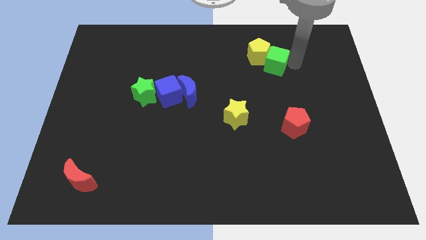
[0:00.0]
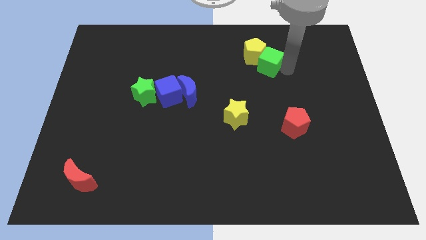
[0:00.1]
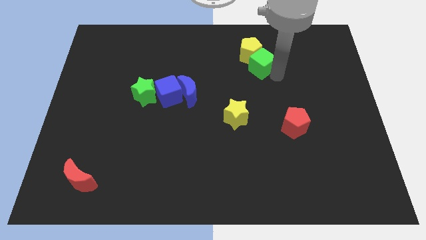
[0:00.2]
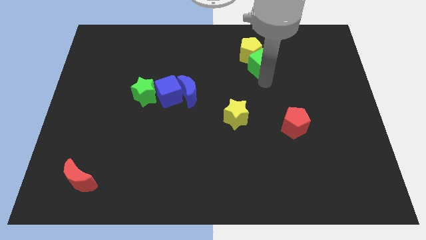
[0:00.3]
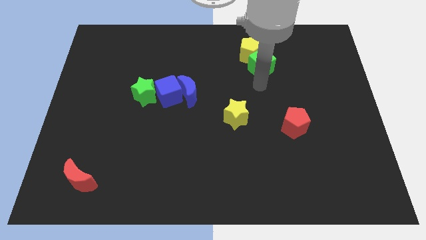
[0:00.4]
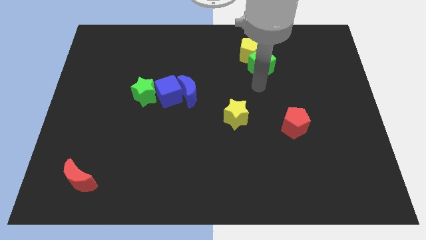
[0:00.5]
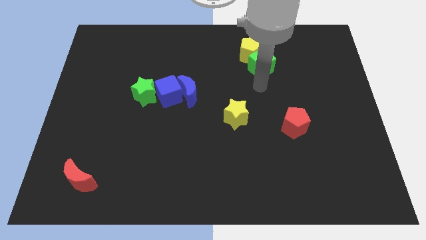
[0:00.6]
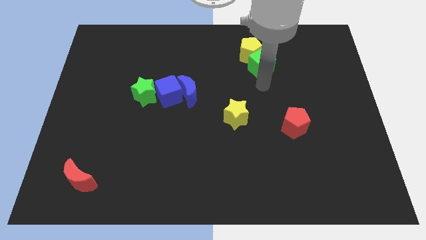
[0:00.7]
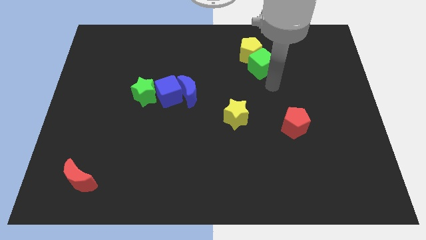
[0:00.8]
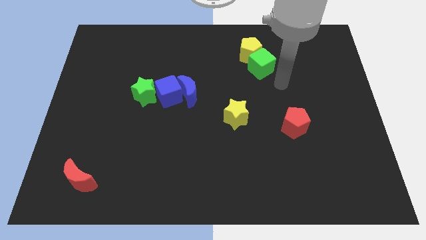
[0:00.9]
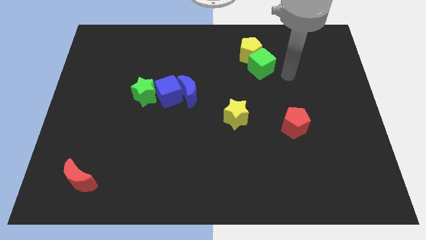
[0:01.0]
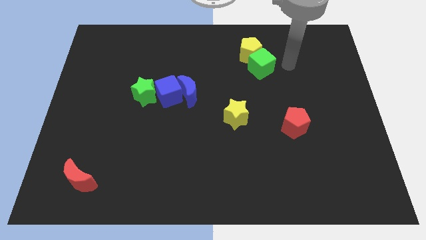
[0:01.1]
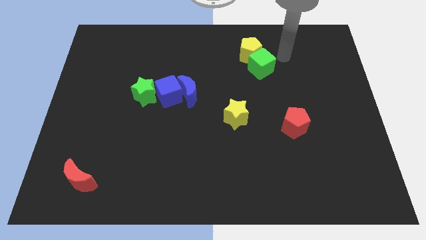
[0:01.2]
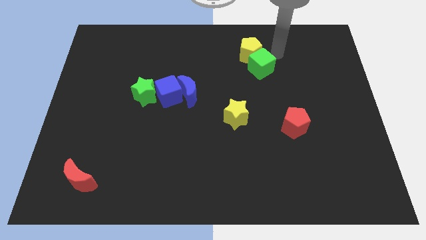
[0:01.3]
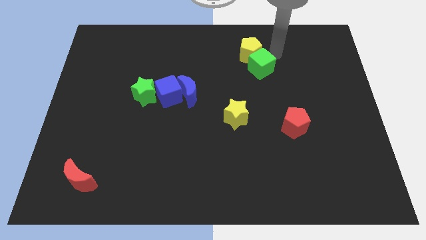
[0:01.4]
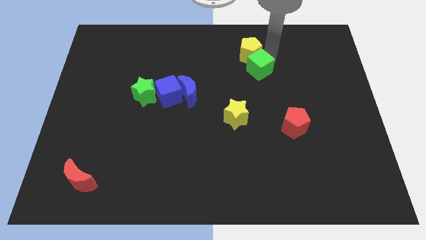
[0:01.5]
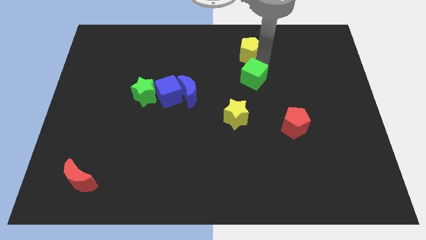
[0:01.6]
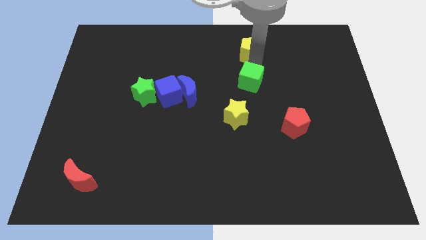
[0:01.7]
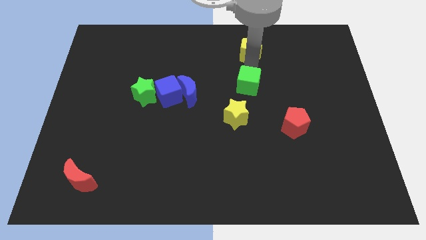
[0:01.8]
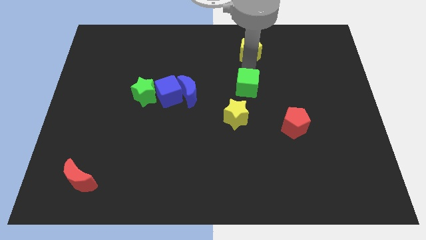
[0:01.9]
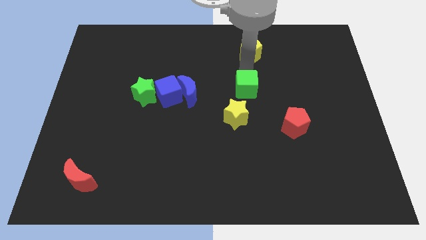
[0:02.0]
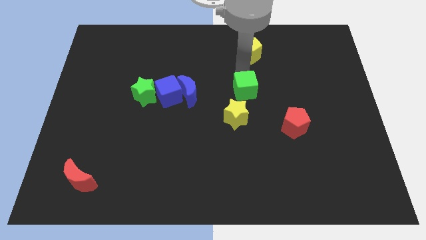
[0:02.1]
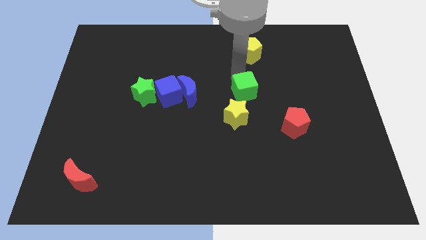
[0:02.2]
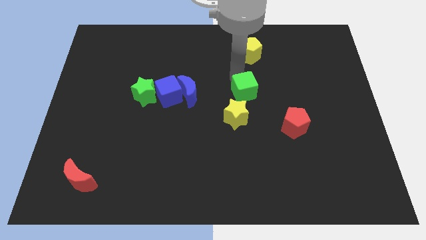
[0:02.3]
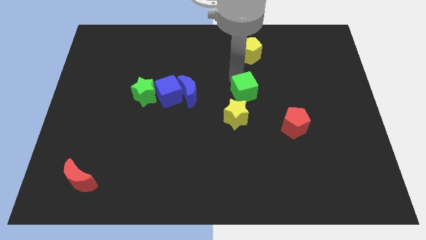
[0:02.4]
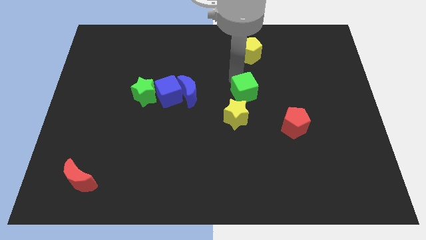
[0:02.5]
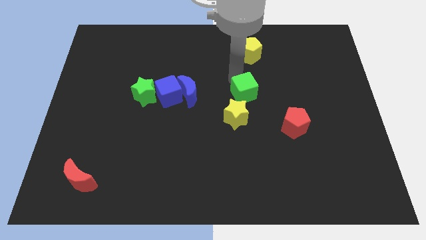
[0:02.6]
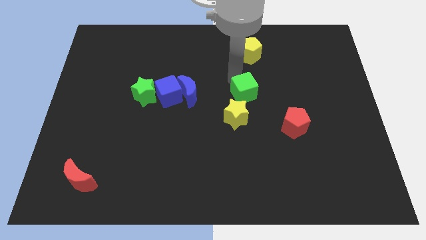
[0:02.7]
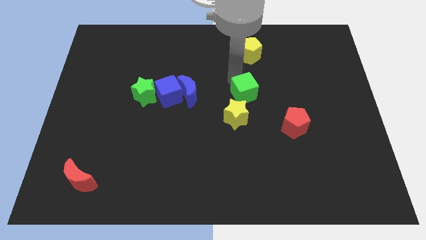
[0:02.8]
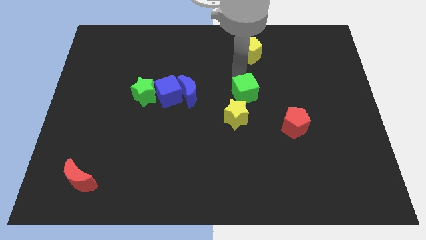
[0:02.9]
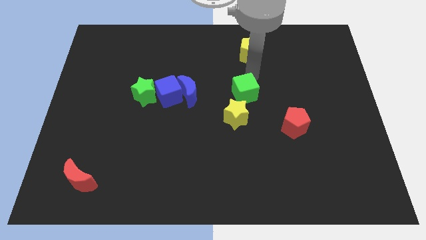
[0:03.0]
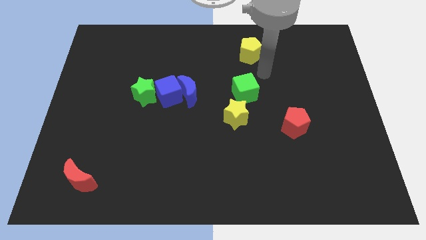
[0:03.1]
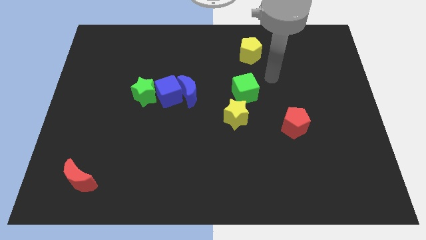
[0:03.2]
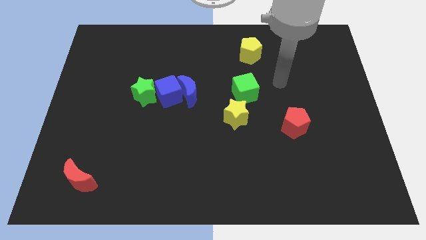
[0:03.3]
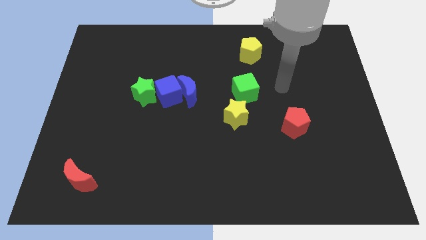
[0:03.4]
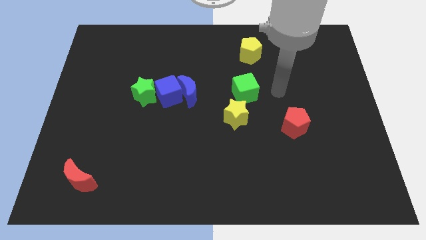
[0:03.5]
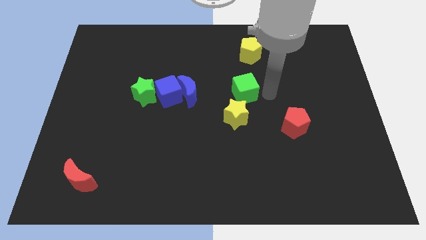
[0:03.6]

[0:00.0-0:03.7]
move the green cube above the yellow star

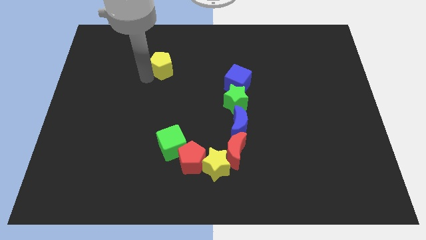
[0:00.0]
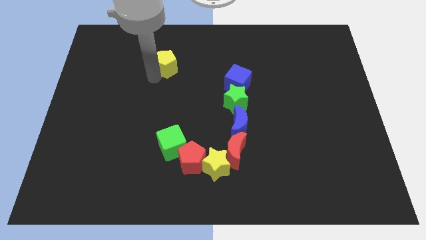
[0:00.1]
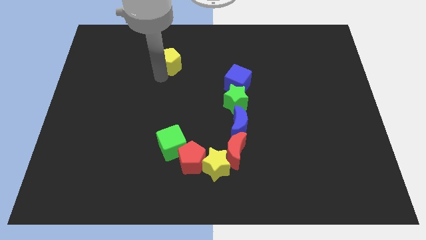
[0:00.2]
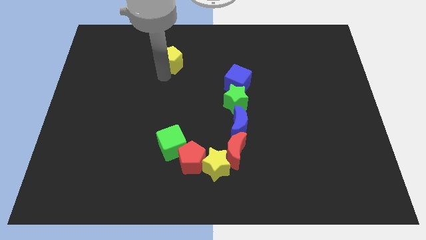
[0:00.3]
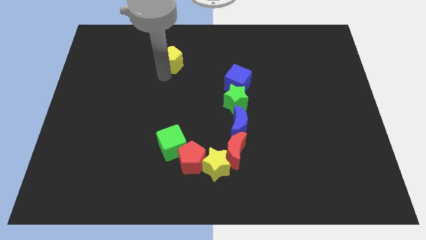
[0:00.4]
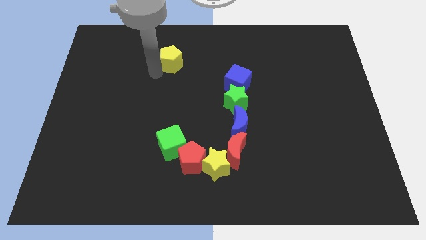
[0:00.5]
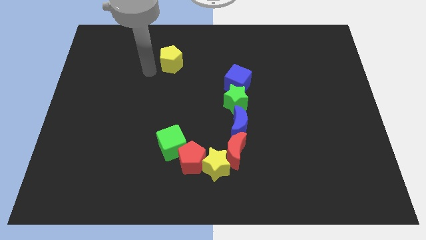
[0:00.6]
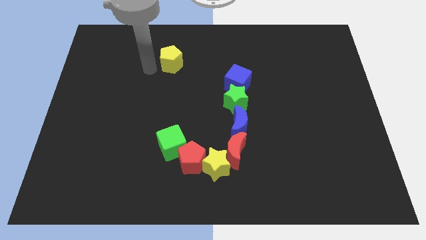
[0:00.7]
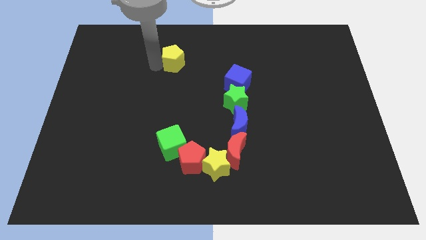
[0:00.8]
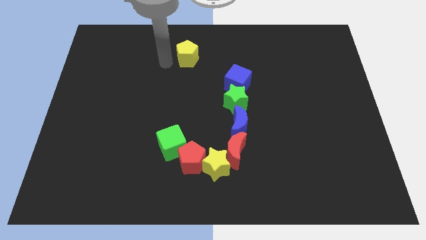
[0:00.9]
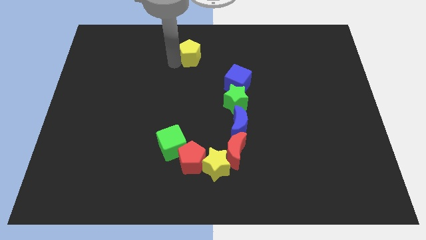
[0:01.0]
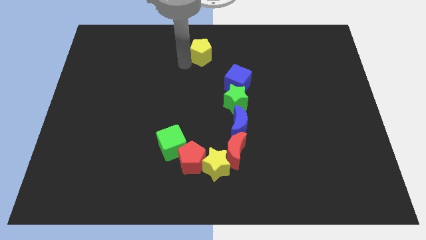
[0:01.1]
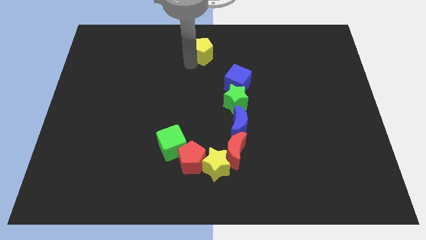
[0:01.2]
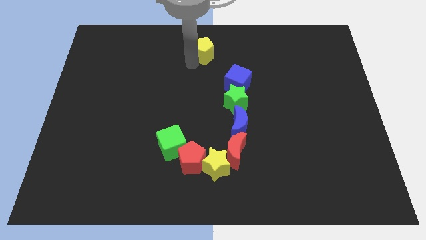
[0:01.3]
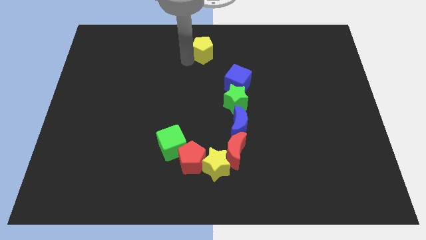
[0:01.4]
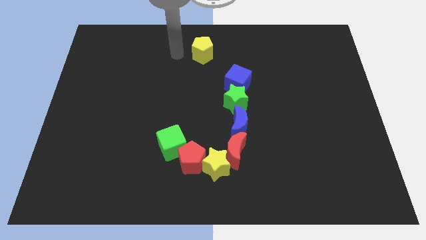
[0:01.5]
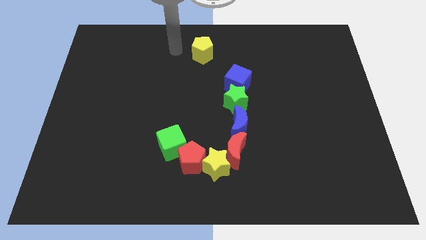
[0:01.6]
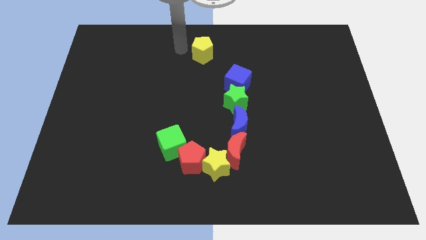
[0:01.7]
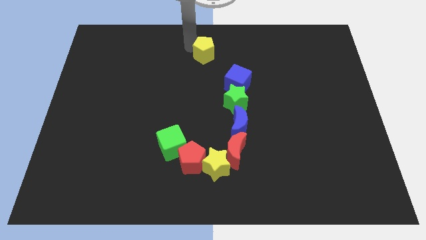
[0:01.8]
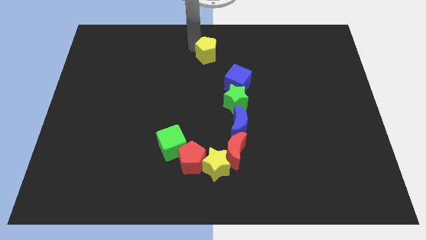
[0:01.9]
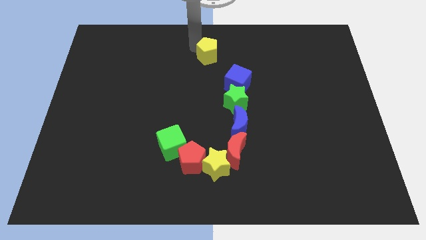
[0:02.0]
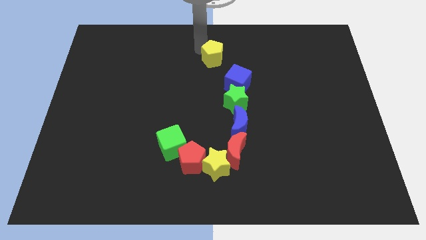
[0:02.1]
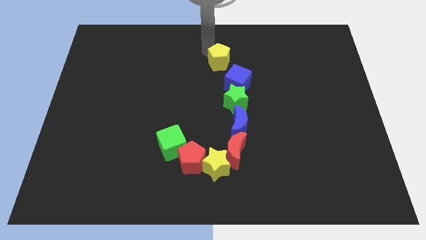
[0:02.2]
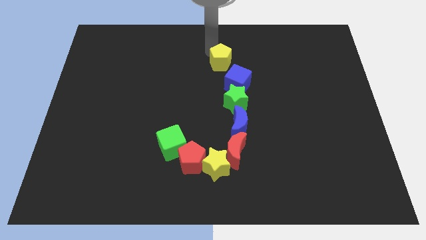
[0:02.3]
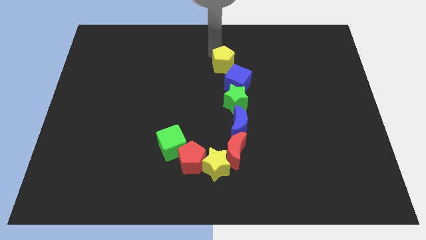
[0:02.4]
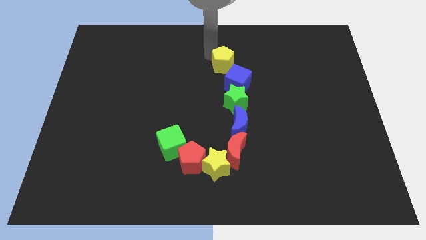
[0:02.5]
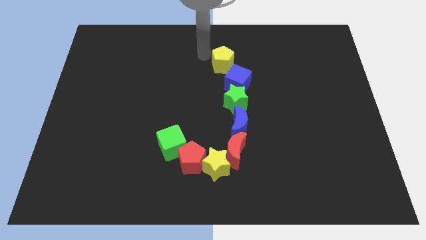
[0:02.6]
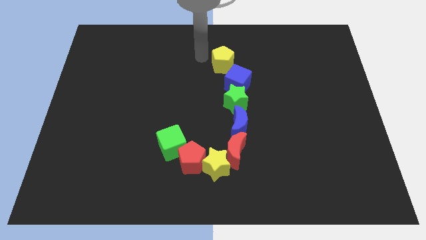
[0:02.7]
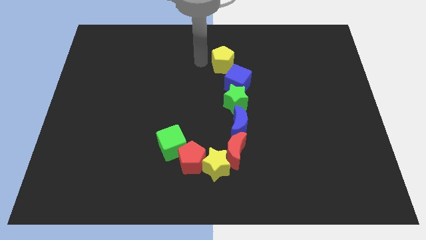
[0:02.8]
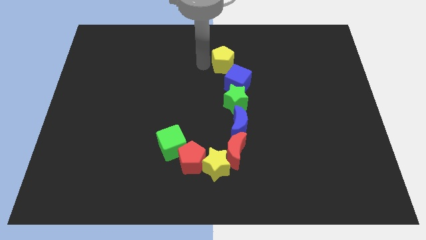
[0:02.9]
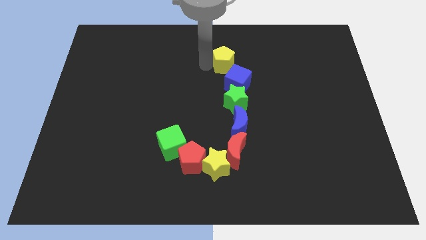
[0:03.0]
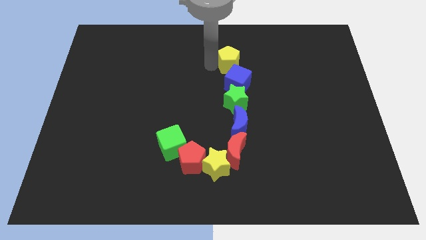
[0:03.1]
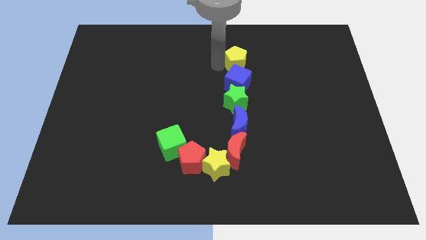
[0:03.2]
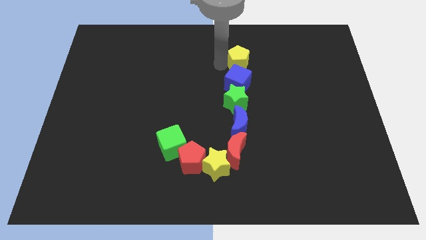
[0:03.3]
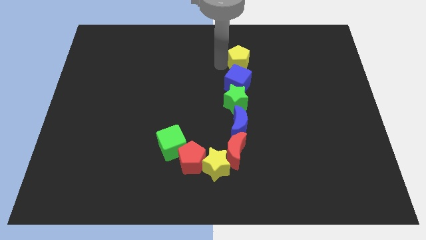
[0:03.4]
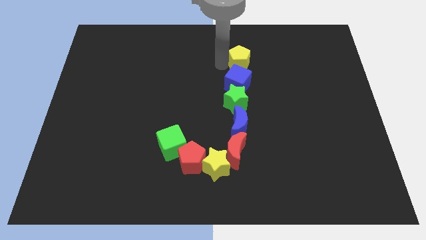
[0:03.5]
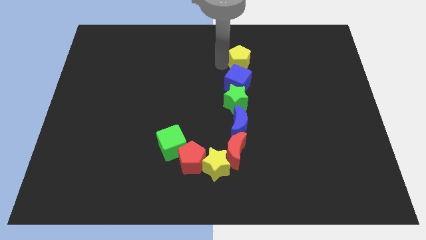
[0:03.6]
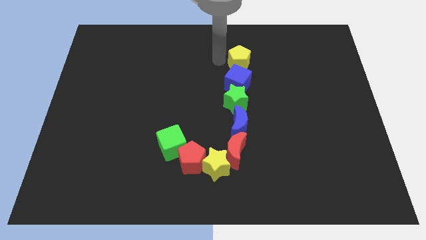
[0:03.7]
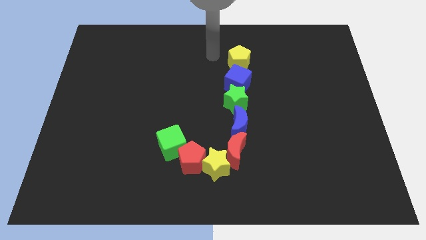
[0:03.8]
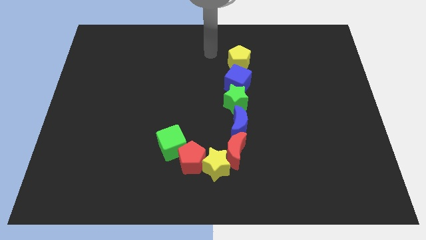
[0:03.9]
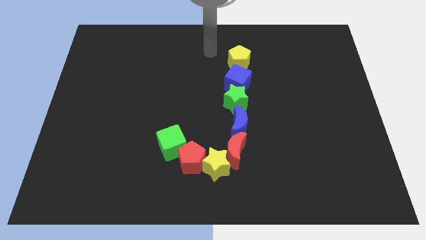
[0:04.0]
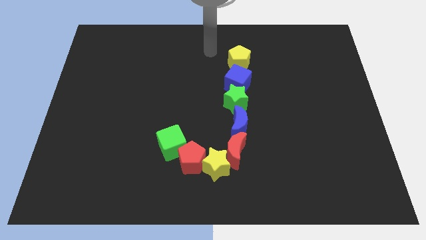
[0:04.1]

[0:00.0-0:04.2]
place yellow pentagon above blue cube

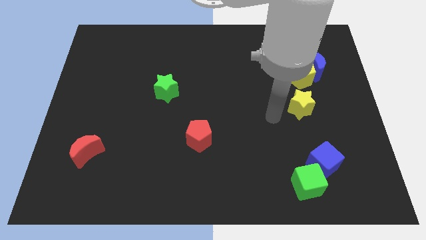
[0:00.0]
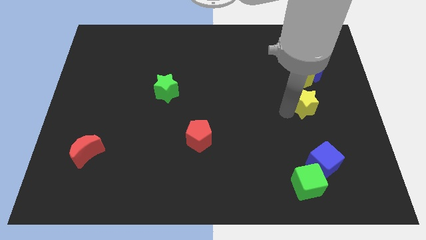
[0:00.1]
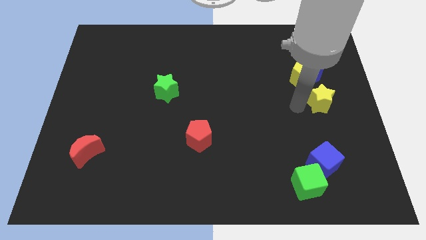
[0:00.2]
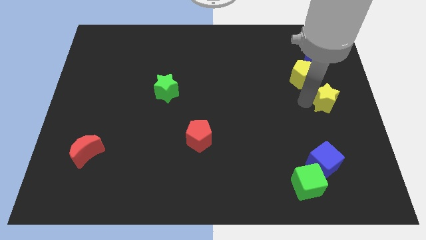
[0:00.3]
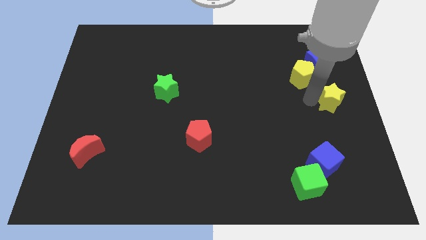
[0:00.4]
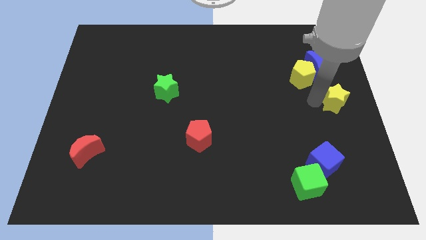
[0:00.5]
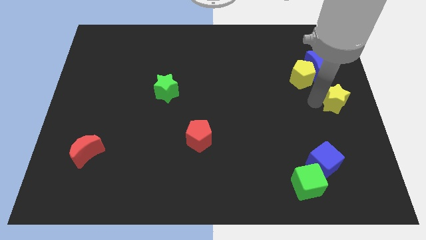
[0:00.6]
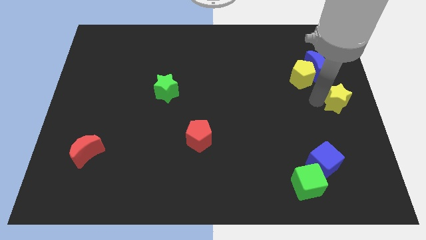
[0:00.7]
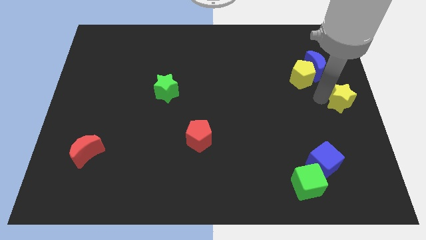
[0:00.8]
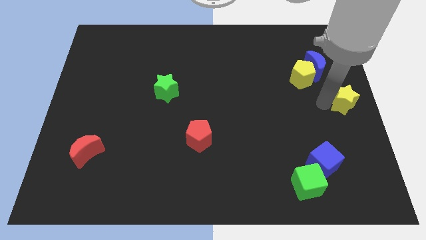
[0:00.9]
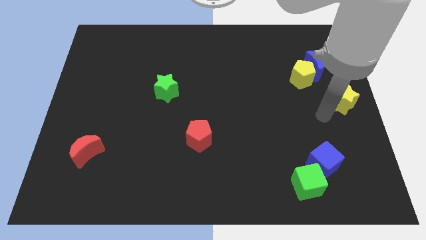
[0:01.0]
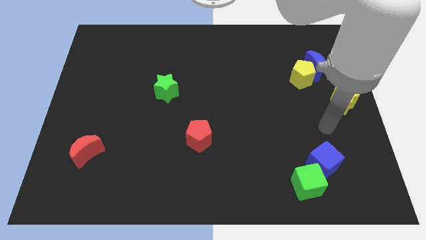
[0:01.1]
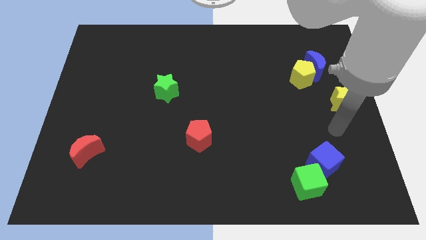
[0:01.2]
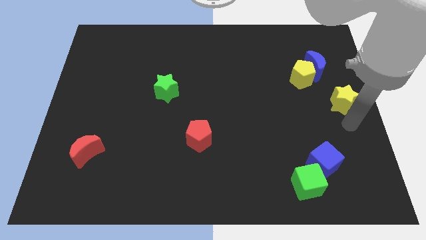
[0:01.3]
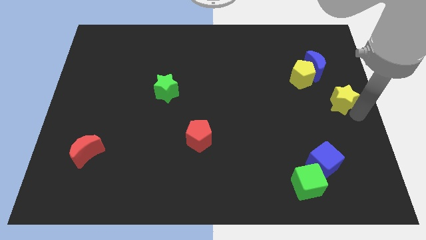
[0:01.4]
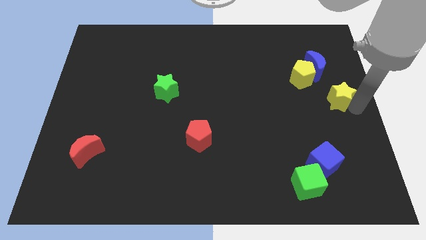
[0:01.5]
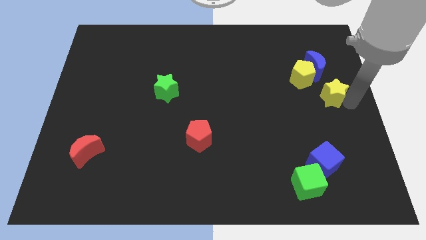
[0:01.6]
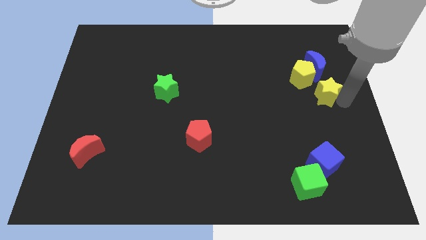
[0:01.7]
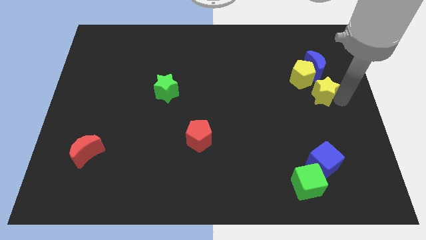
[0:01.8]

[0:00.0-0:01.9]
place the yellow start below the blue crescent
